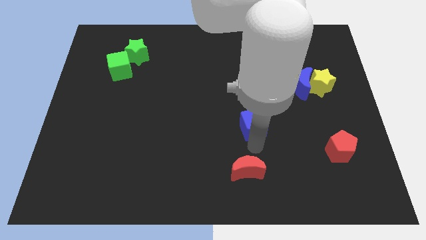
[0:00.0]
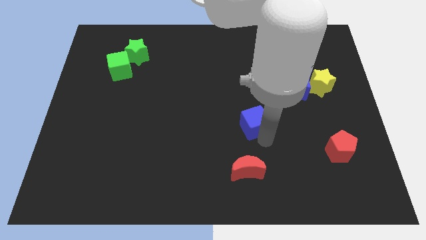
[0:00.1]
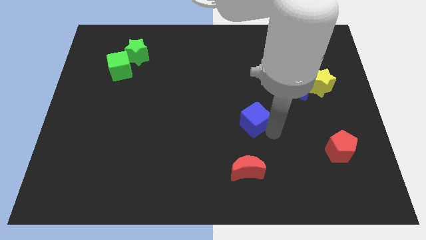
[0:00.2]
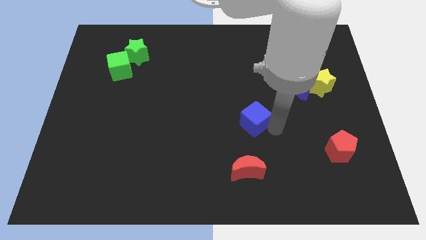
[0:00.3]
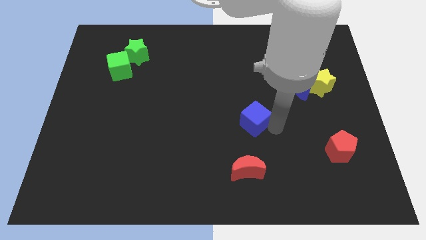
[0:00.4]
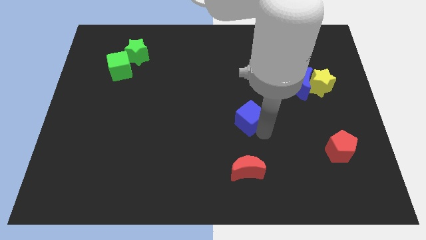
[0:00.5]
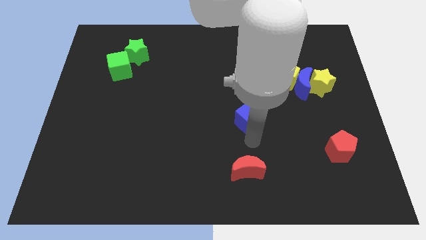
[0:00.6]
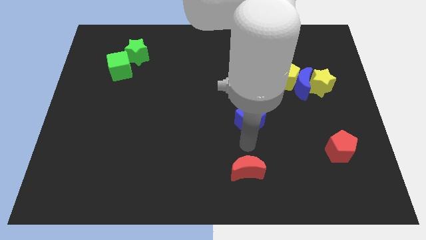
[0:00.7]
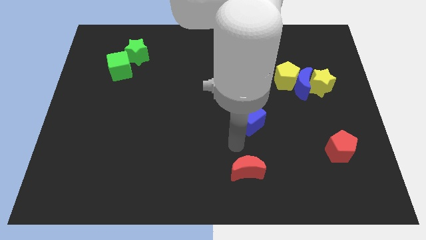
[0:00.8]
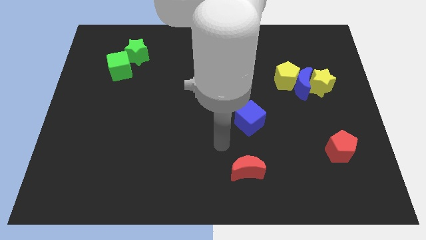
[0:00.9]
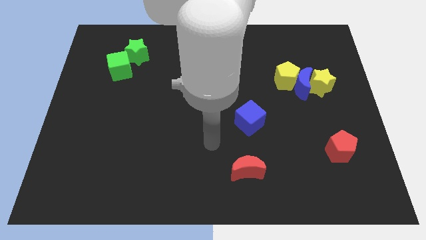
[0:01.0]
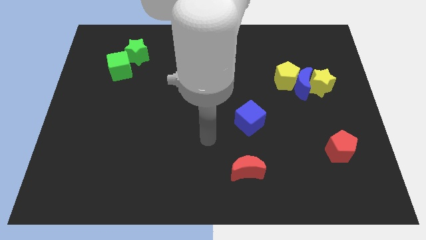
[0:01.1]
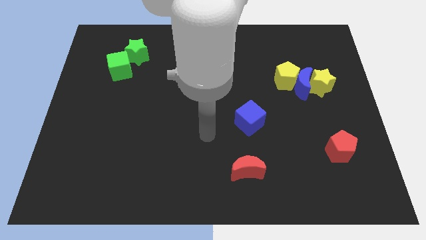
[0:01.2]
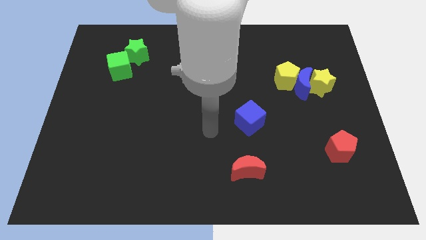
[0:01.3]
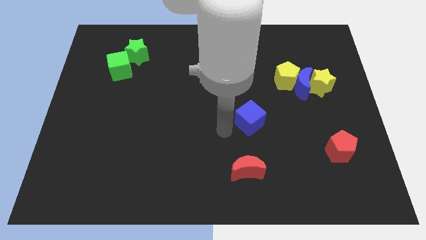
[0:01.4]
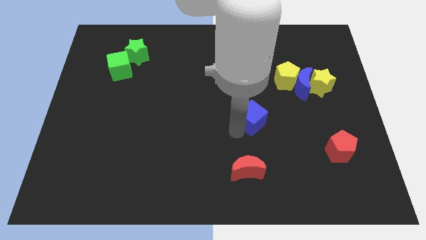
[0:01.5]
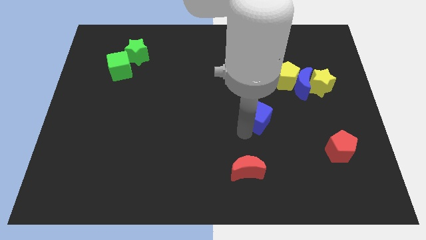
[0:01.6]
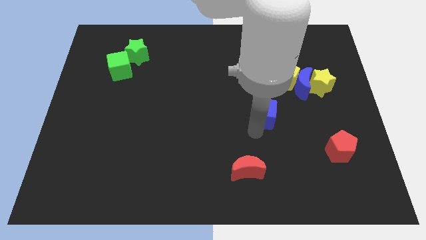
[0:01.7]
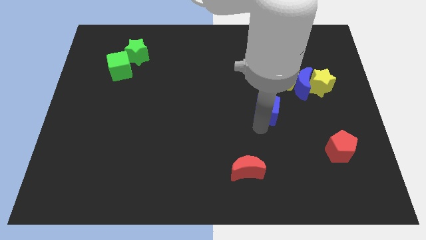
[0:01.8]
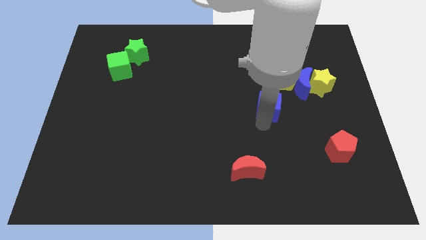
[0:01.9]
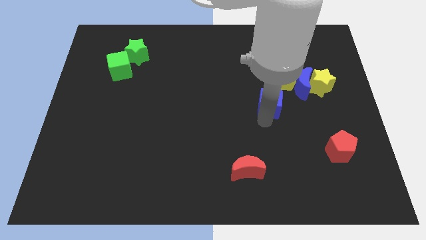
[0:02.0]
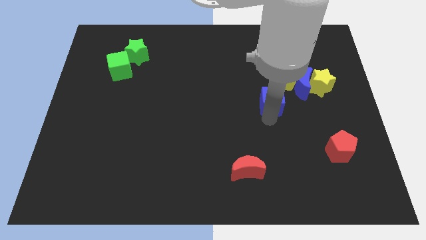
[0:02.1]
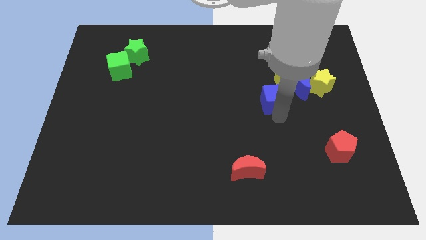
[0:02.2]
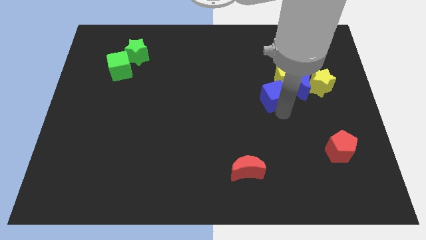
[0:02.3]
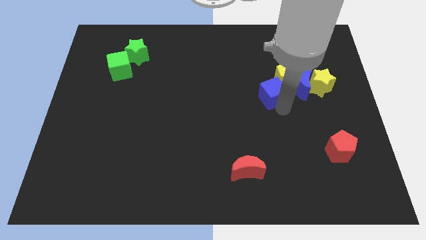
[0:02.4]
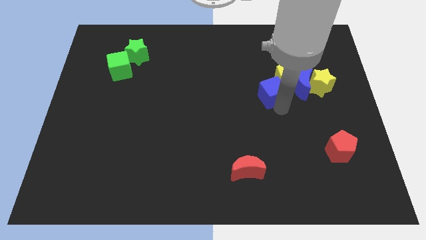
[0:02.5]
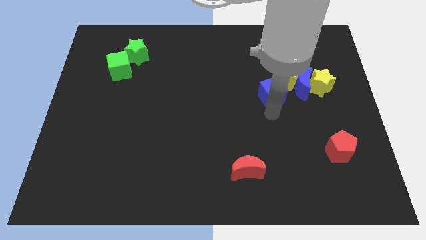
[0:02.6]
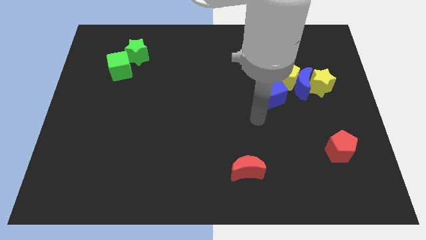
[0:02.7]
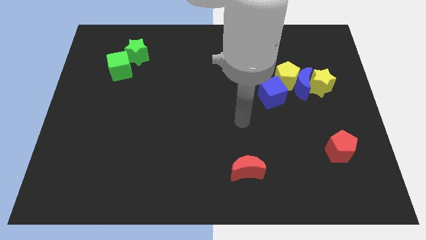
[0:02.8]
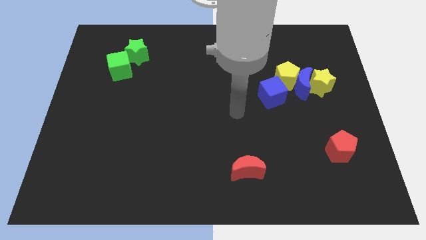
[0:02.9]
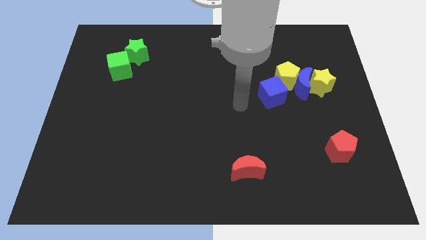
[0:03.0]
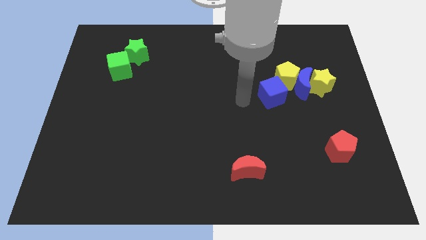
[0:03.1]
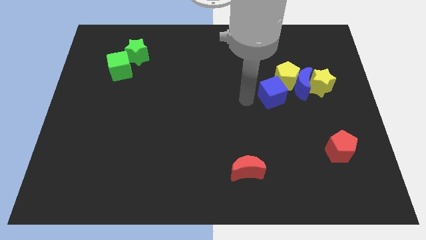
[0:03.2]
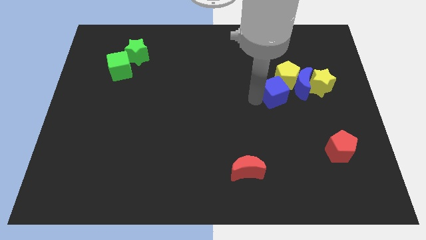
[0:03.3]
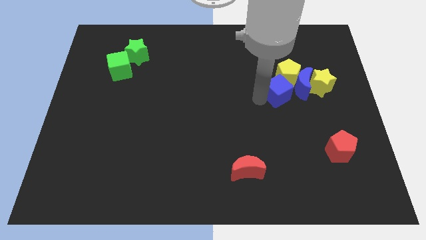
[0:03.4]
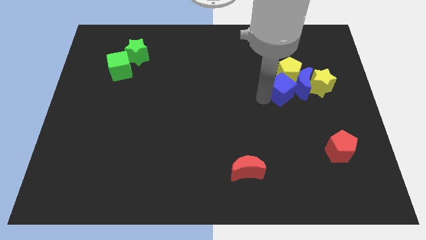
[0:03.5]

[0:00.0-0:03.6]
move the blue cube to the bottom of the yellow pentagon

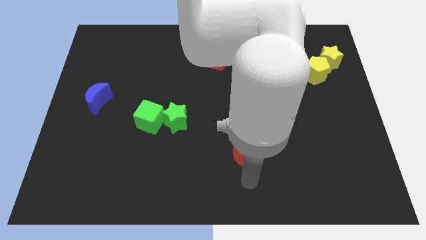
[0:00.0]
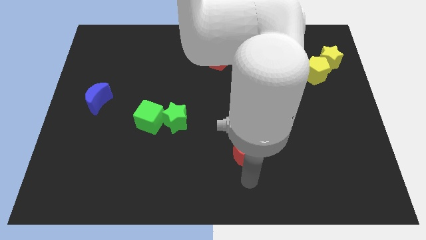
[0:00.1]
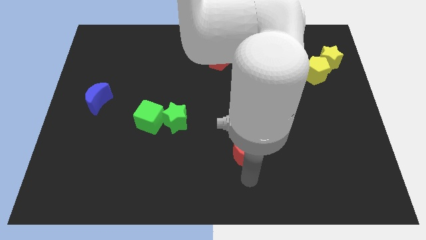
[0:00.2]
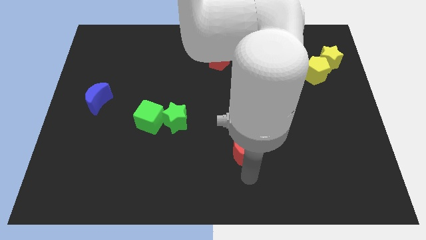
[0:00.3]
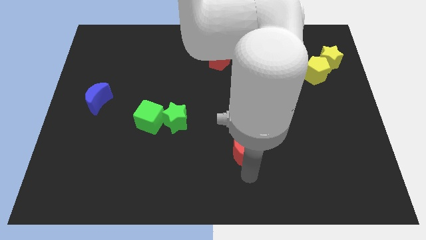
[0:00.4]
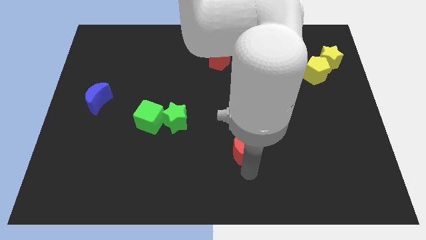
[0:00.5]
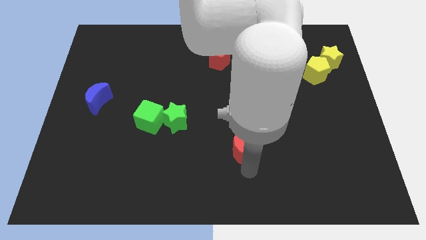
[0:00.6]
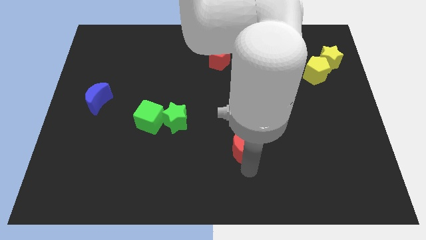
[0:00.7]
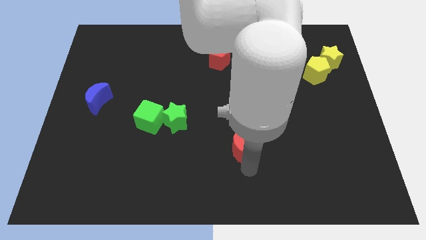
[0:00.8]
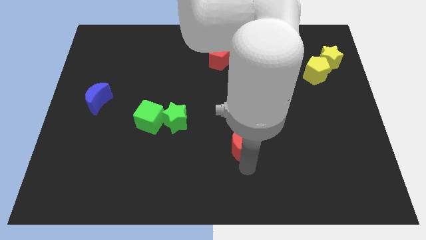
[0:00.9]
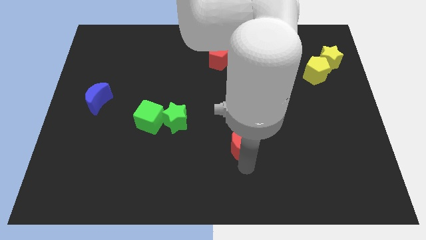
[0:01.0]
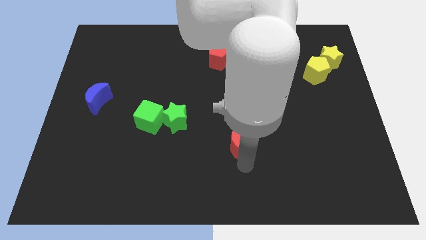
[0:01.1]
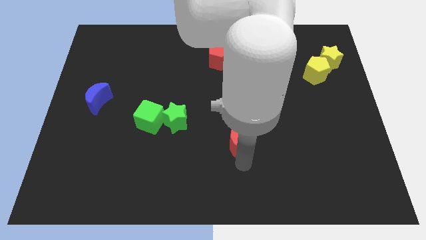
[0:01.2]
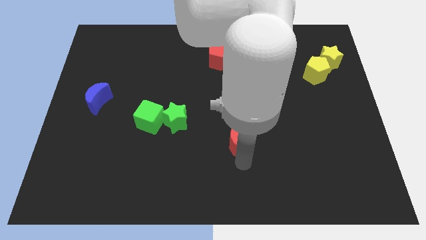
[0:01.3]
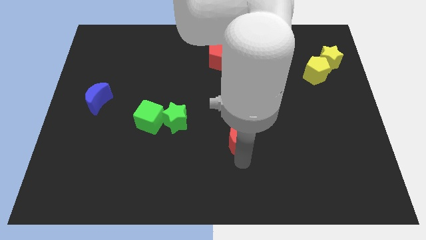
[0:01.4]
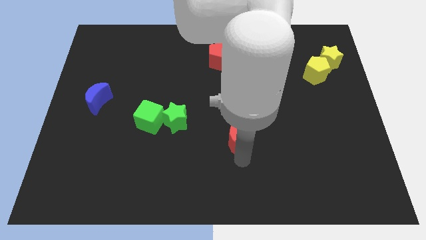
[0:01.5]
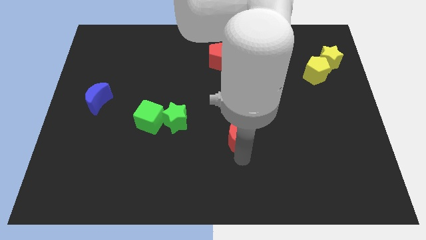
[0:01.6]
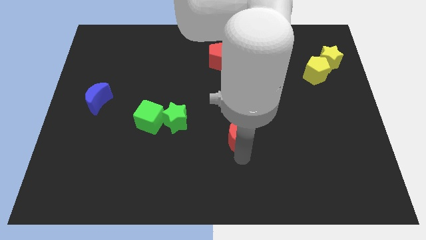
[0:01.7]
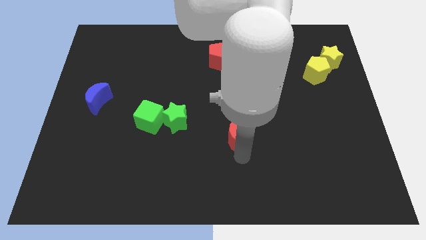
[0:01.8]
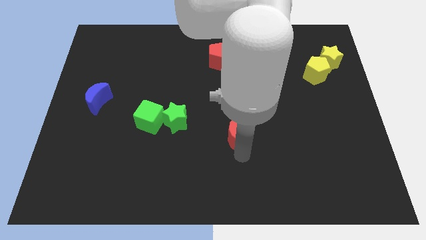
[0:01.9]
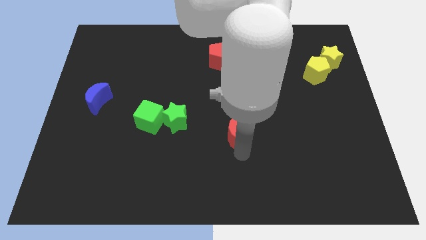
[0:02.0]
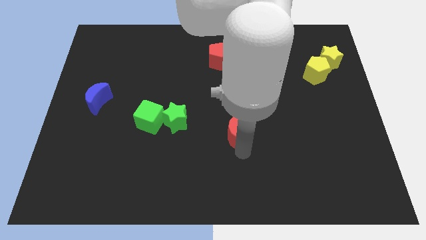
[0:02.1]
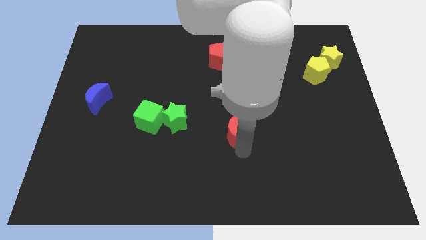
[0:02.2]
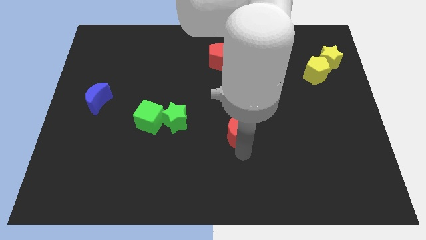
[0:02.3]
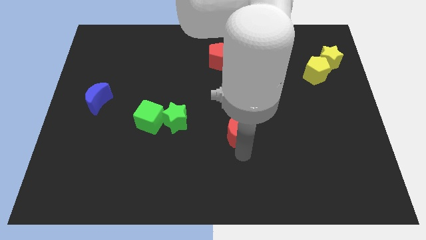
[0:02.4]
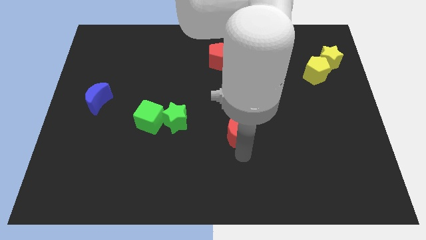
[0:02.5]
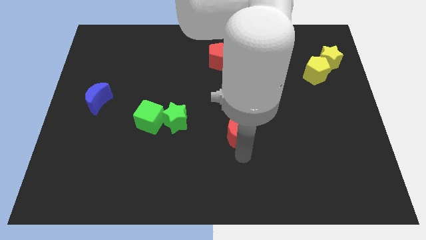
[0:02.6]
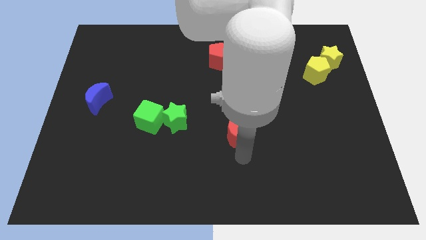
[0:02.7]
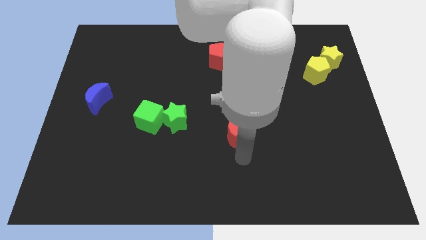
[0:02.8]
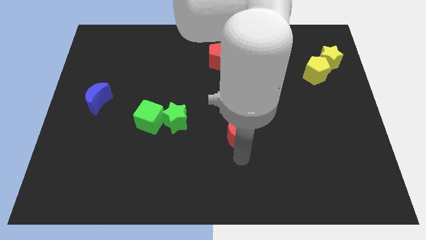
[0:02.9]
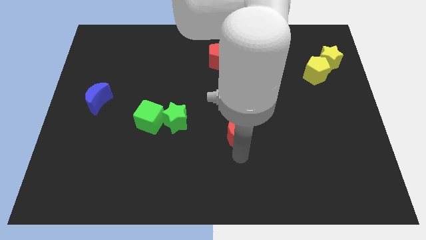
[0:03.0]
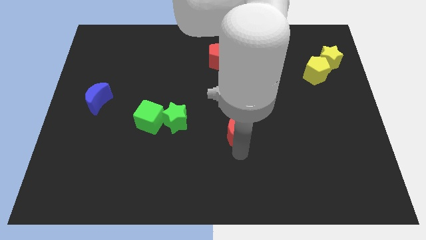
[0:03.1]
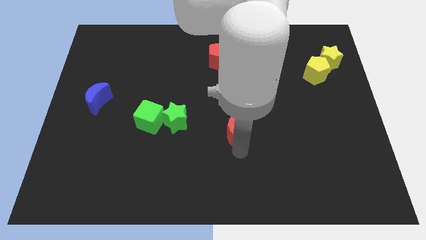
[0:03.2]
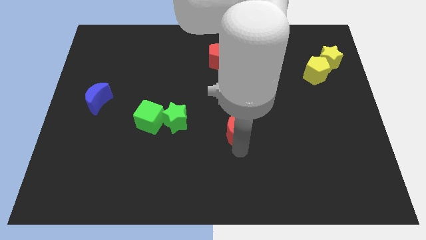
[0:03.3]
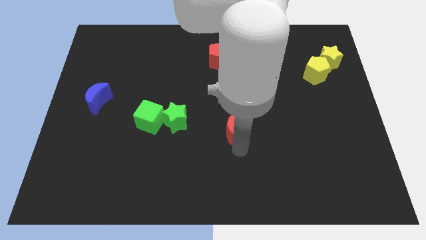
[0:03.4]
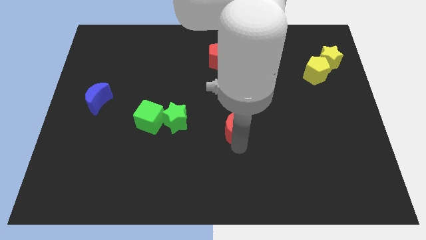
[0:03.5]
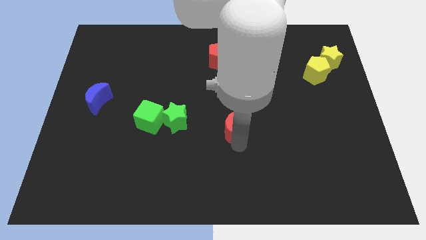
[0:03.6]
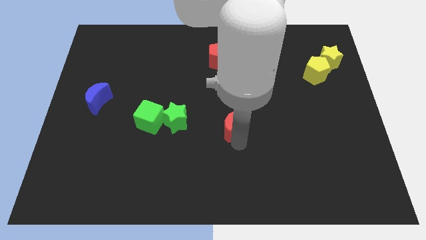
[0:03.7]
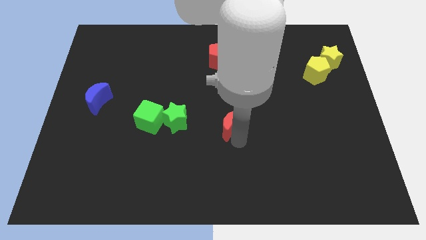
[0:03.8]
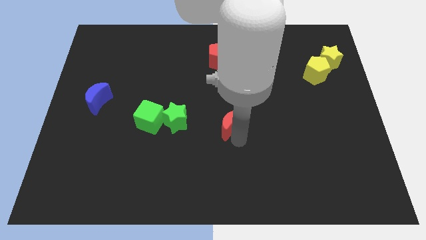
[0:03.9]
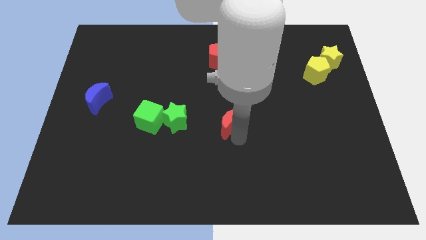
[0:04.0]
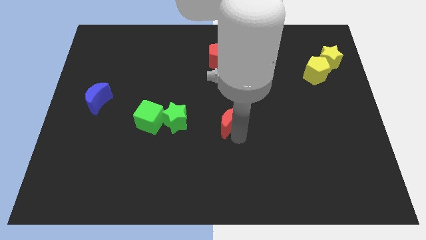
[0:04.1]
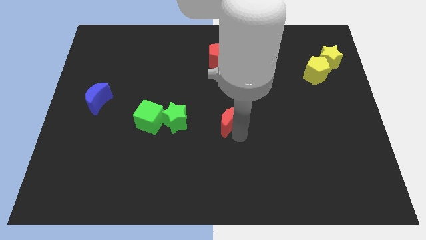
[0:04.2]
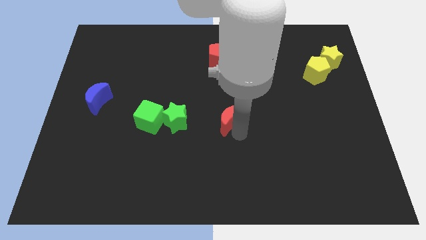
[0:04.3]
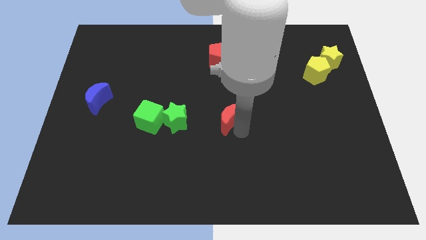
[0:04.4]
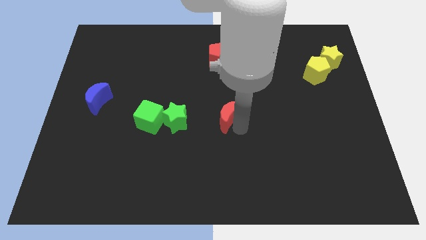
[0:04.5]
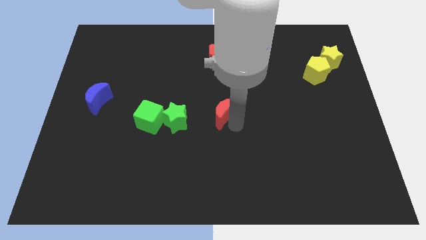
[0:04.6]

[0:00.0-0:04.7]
put the red moon horizontally to the right of the green star

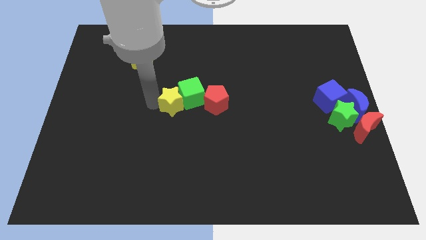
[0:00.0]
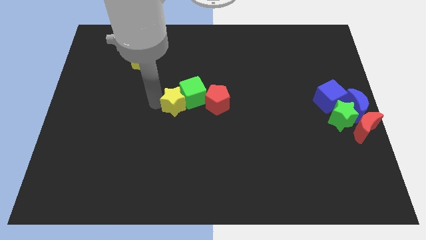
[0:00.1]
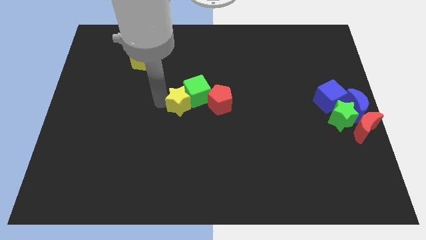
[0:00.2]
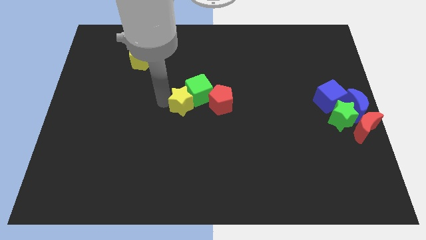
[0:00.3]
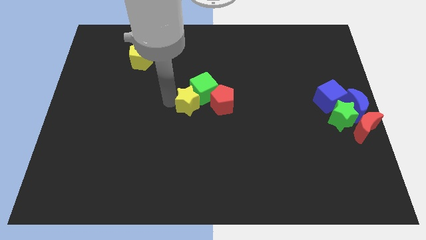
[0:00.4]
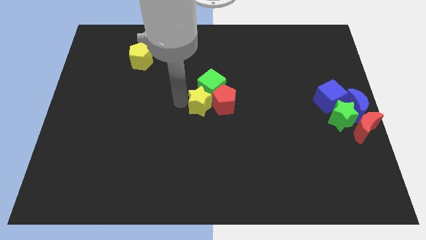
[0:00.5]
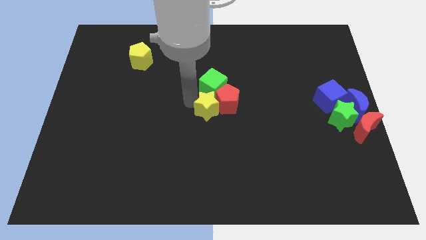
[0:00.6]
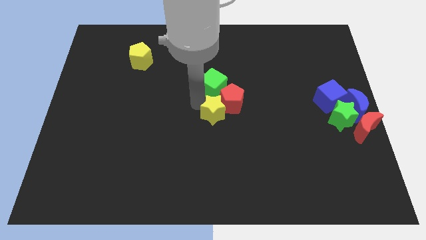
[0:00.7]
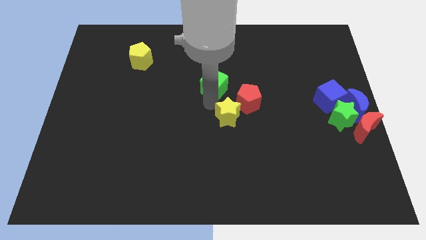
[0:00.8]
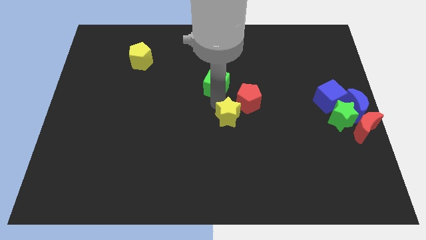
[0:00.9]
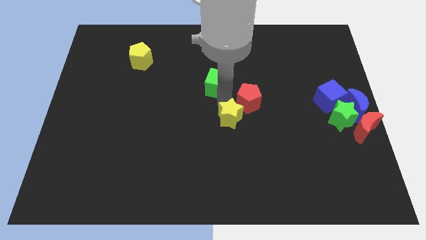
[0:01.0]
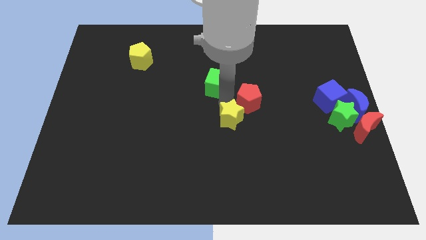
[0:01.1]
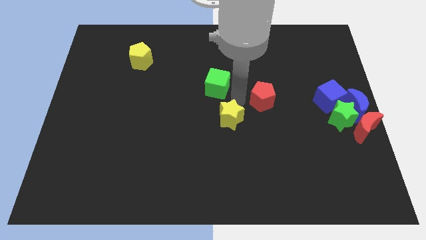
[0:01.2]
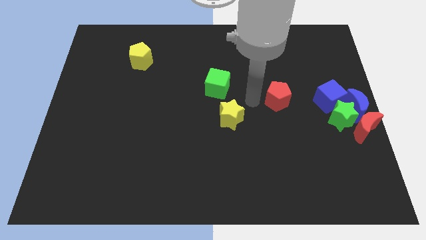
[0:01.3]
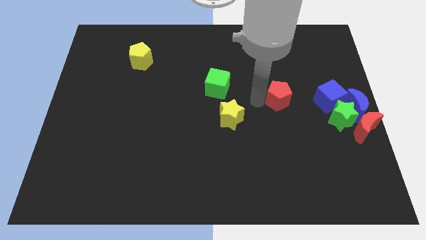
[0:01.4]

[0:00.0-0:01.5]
separate the red pentagon and green cube from yellow star
